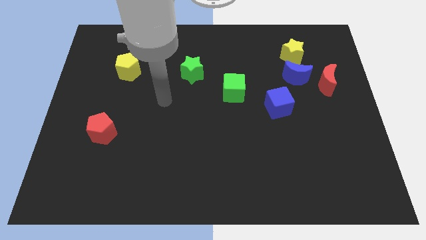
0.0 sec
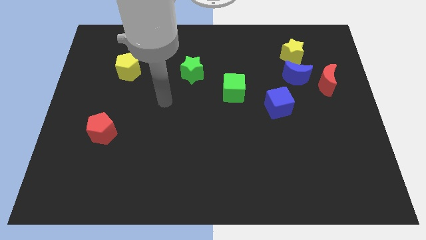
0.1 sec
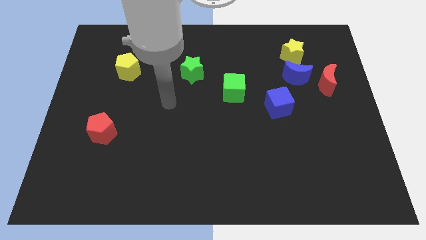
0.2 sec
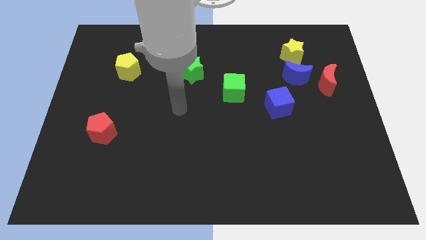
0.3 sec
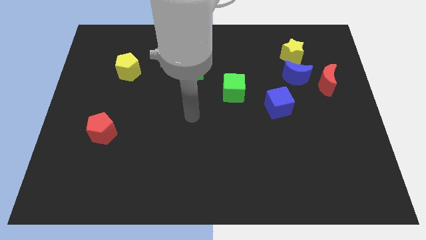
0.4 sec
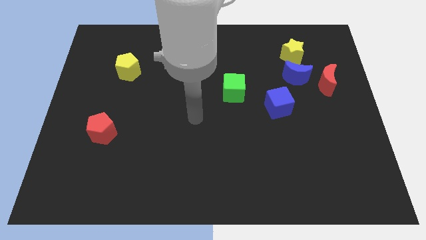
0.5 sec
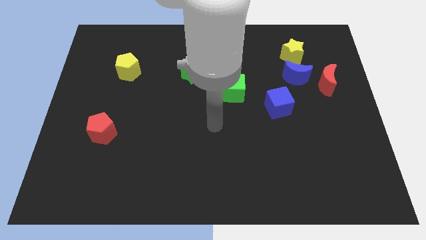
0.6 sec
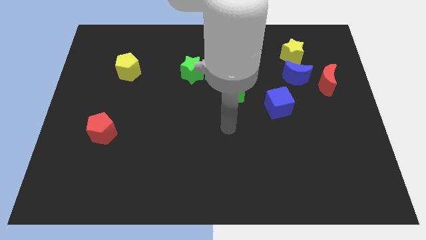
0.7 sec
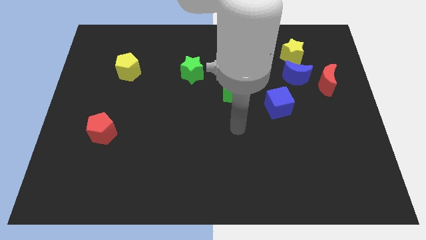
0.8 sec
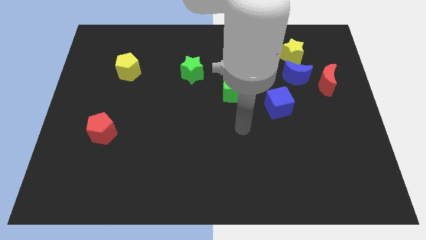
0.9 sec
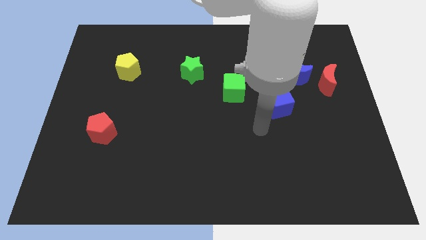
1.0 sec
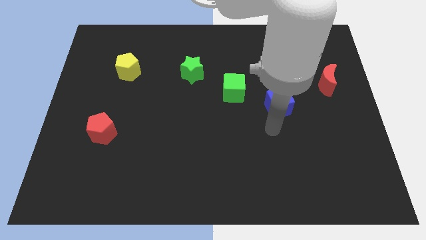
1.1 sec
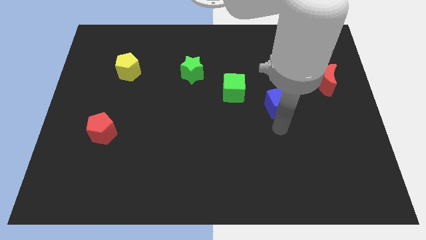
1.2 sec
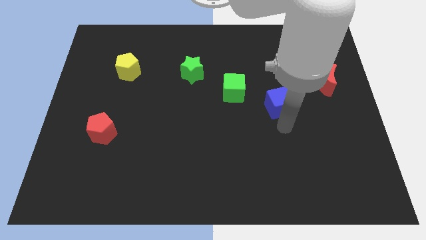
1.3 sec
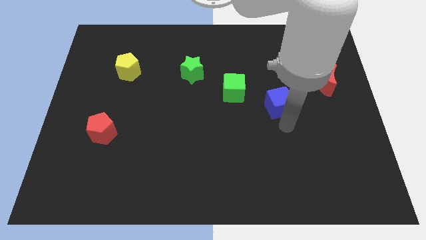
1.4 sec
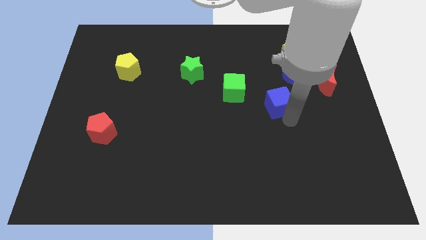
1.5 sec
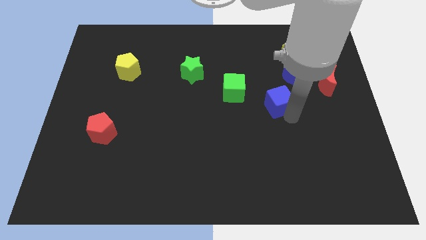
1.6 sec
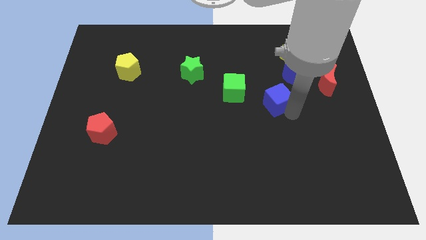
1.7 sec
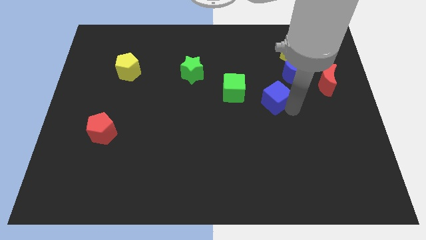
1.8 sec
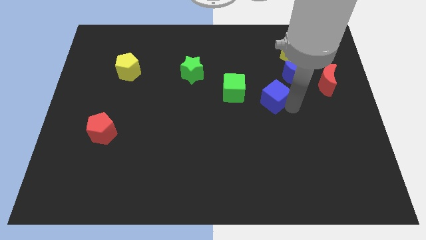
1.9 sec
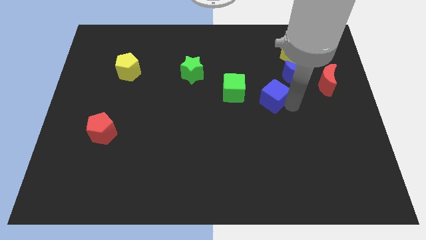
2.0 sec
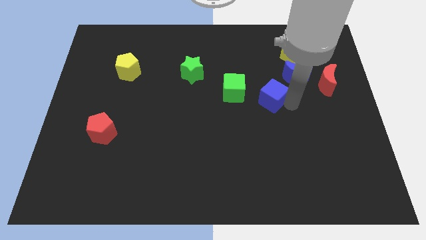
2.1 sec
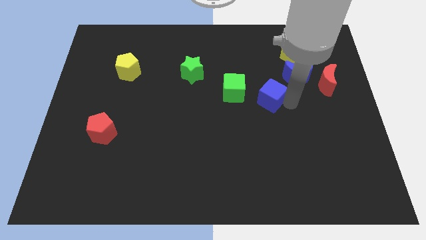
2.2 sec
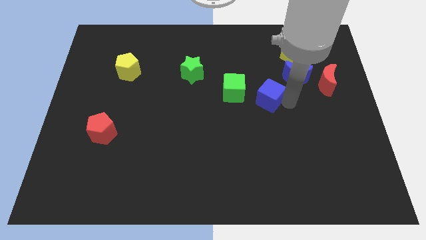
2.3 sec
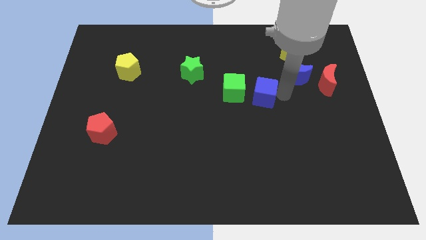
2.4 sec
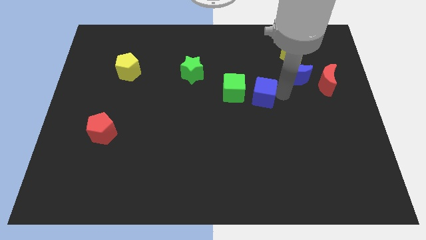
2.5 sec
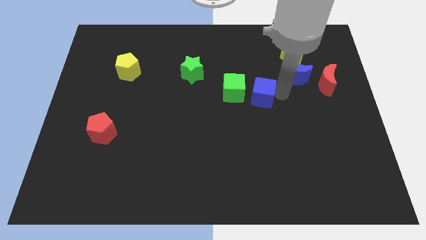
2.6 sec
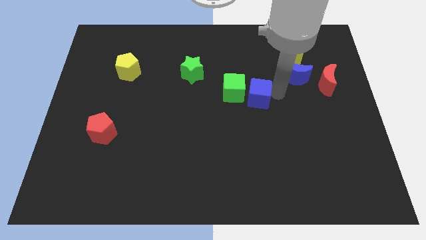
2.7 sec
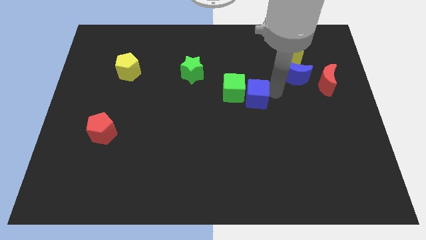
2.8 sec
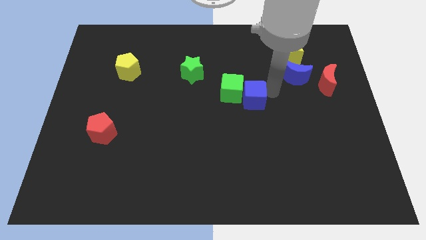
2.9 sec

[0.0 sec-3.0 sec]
slide the blue cube towards the green cube

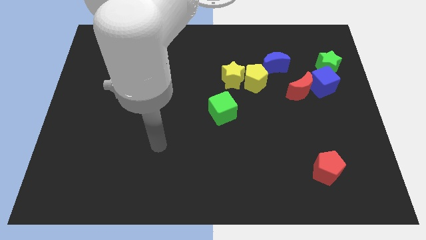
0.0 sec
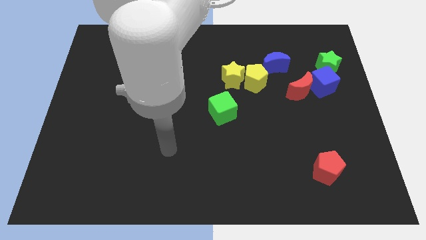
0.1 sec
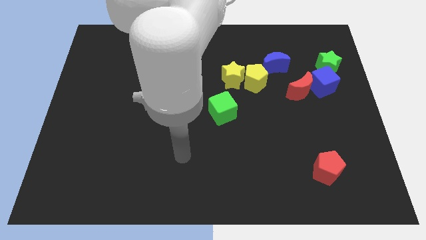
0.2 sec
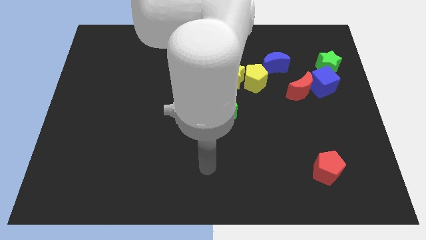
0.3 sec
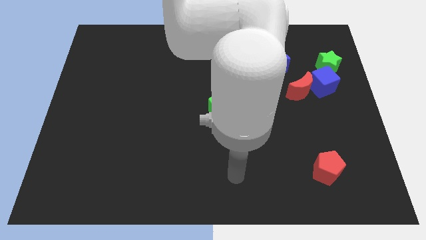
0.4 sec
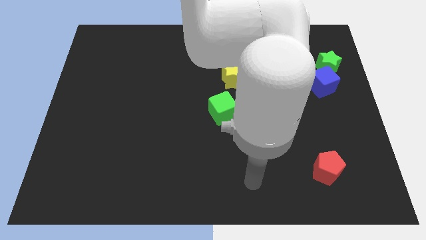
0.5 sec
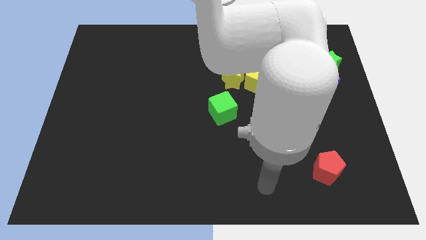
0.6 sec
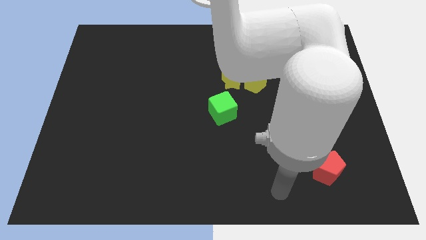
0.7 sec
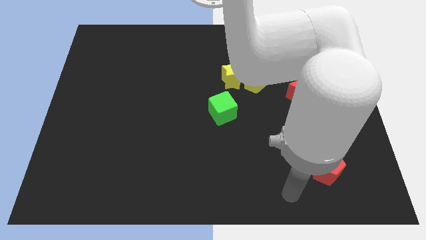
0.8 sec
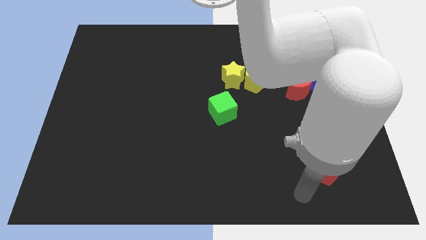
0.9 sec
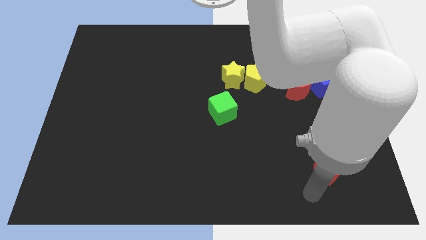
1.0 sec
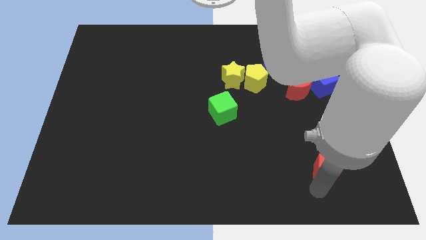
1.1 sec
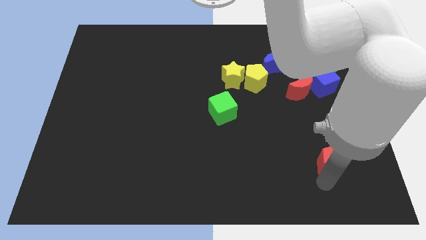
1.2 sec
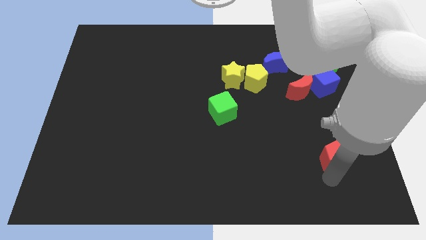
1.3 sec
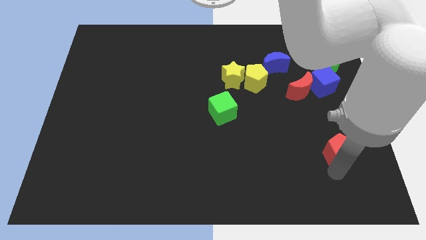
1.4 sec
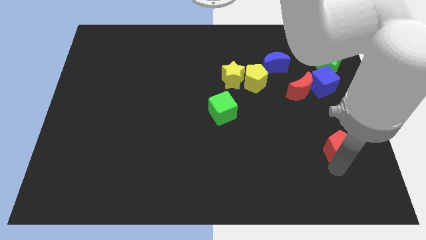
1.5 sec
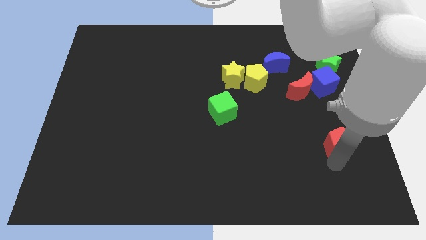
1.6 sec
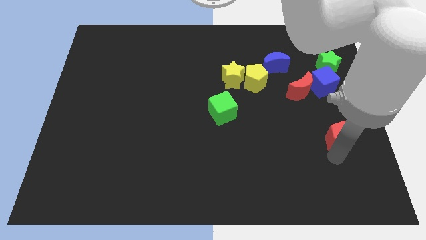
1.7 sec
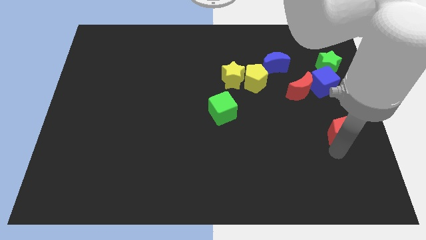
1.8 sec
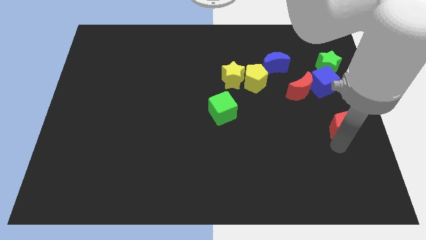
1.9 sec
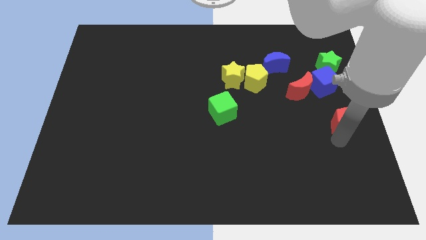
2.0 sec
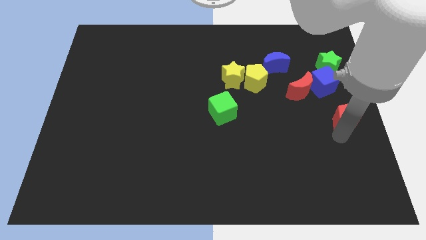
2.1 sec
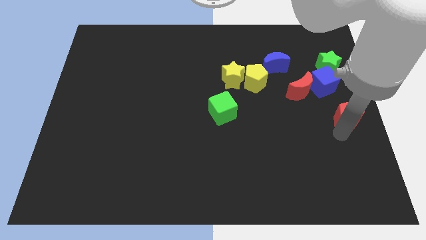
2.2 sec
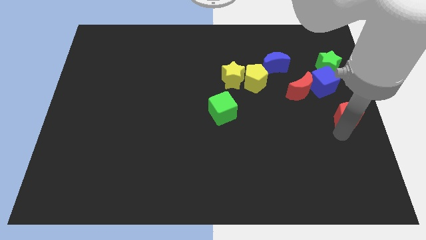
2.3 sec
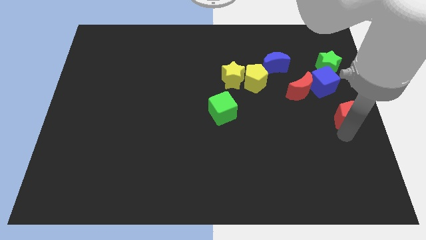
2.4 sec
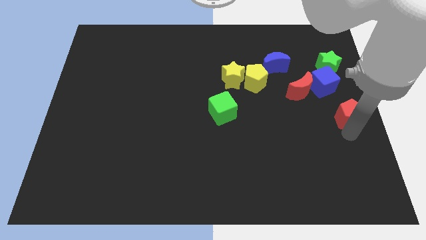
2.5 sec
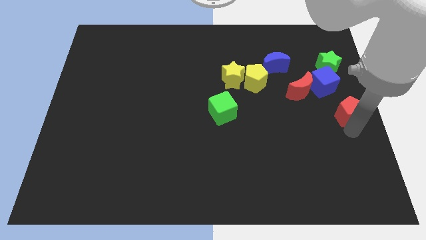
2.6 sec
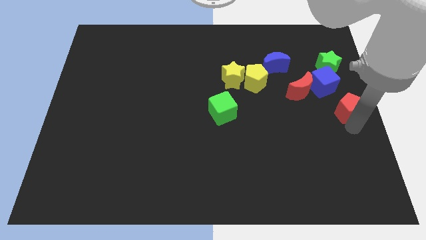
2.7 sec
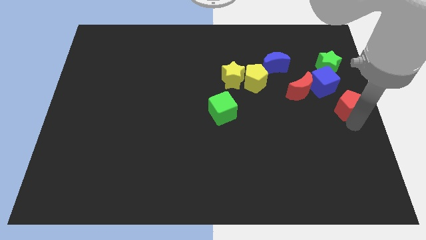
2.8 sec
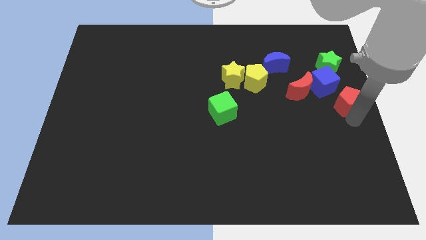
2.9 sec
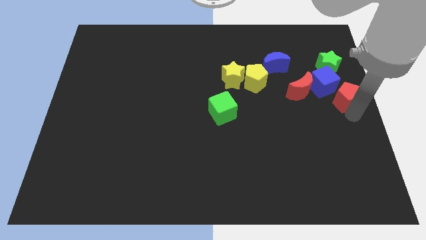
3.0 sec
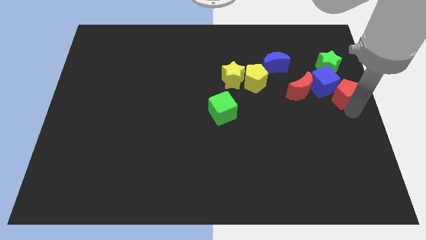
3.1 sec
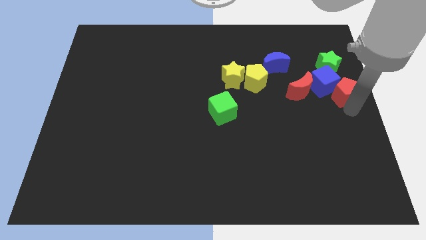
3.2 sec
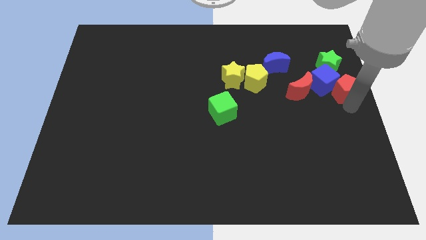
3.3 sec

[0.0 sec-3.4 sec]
push the red pentagon to the blue cube

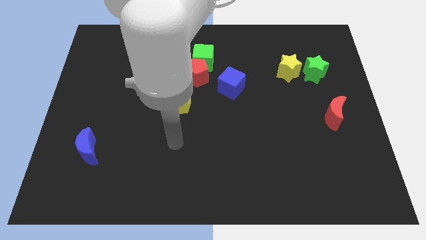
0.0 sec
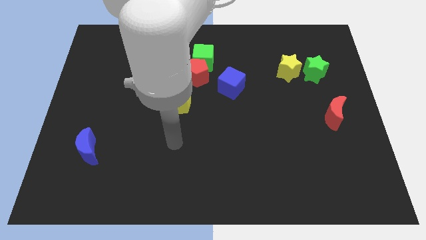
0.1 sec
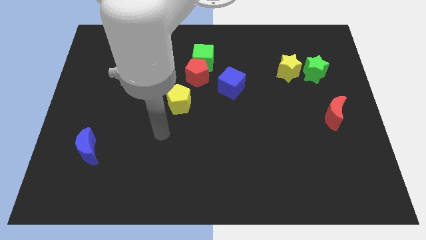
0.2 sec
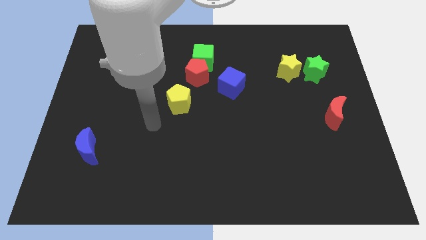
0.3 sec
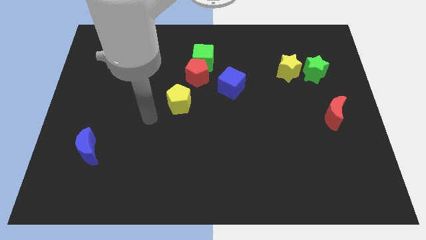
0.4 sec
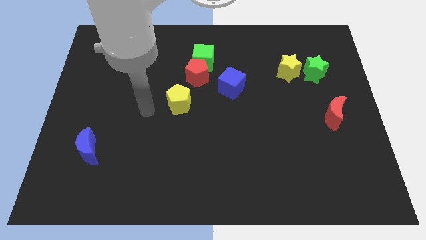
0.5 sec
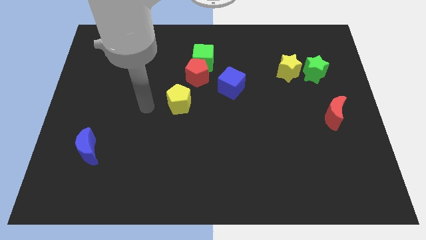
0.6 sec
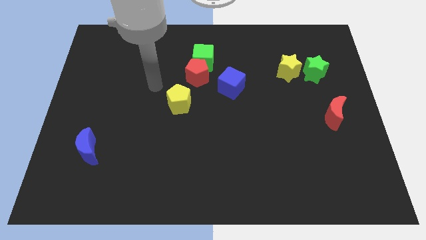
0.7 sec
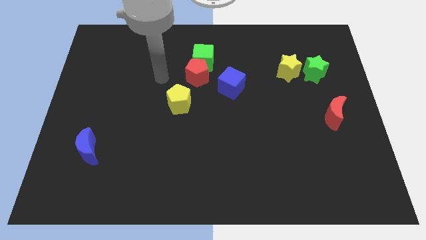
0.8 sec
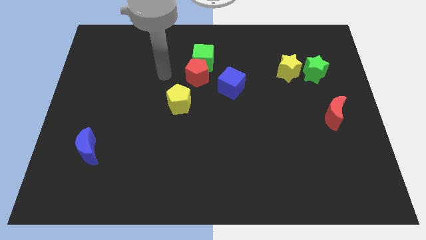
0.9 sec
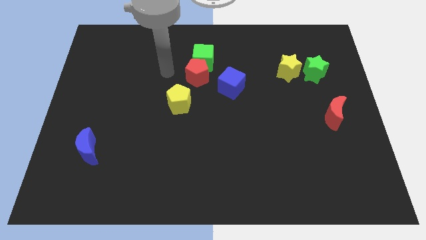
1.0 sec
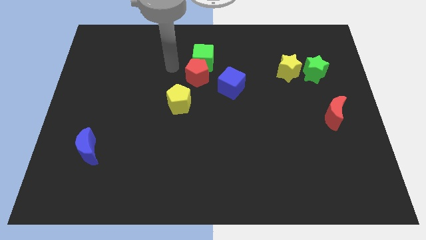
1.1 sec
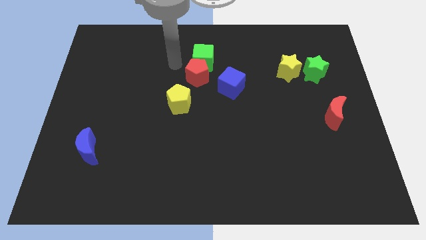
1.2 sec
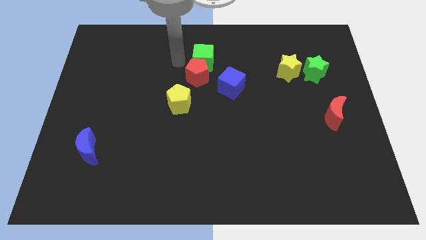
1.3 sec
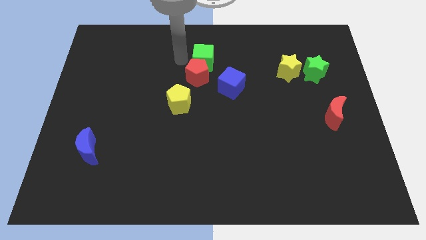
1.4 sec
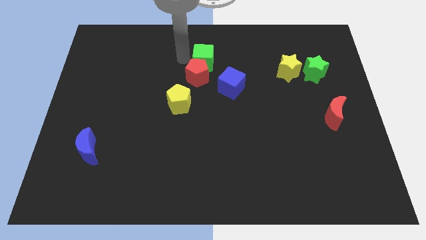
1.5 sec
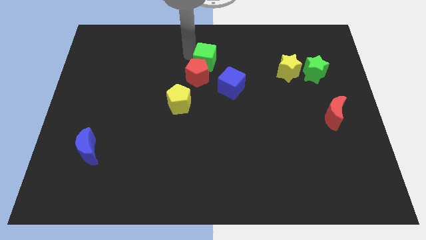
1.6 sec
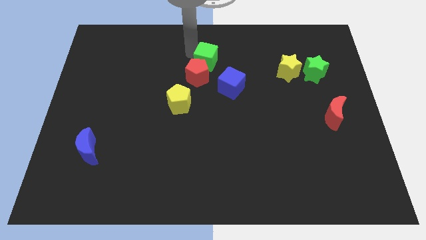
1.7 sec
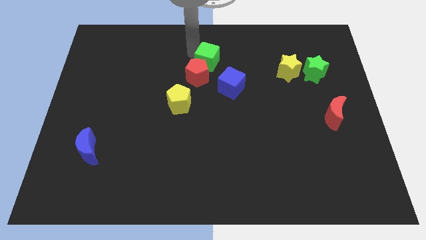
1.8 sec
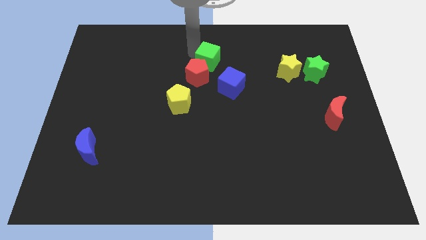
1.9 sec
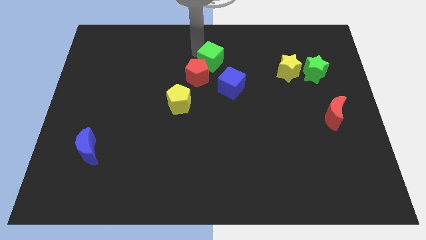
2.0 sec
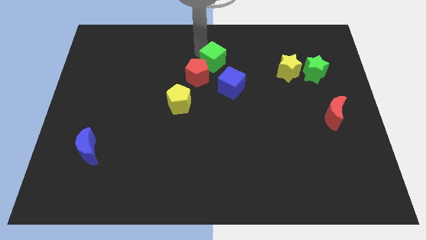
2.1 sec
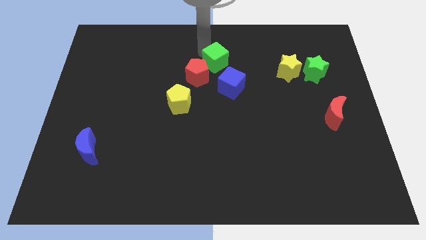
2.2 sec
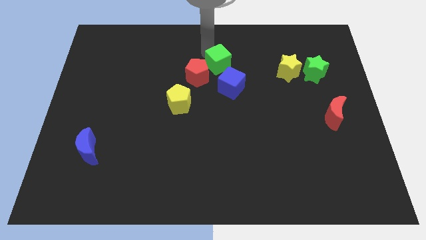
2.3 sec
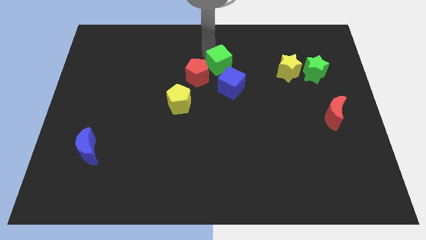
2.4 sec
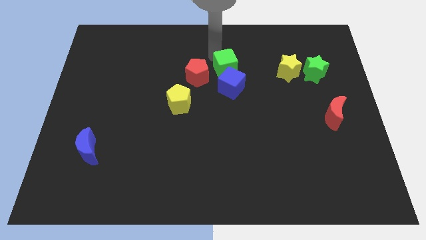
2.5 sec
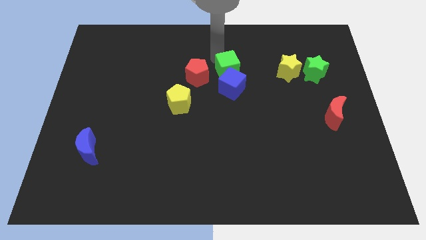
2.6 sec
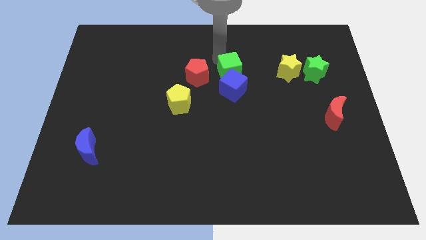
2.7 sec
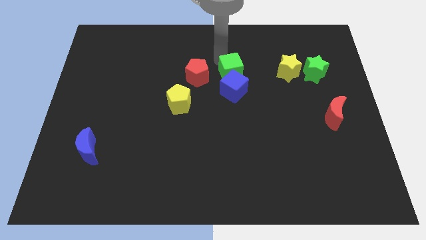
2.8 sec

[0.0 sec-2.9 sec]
put the green cube close to the blue cube
